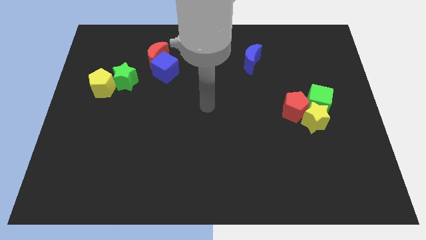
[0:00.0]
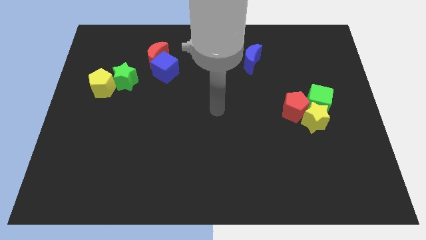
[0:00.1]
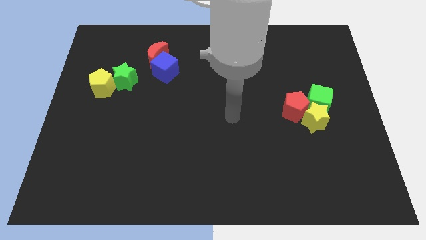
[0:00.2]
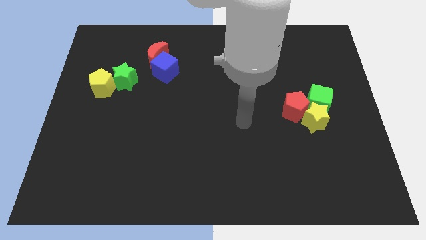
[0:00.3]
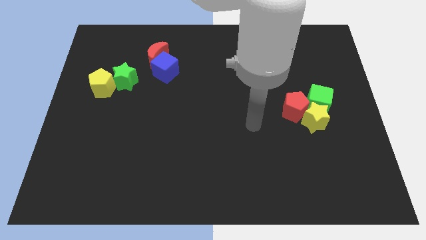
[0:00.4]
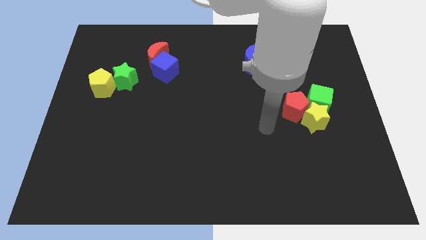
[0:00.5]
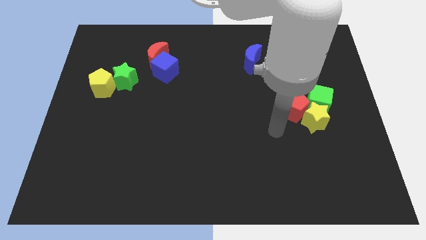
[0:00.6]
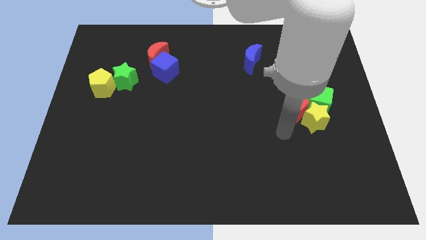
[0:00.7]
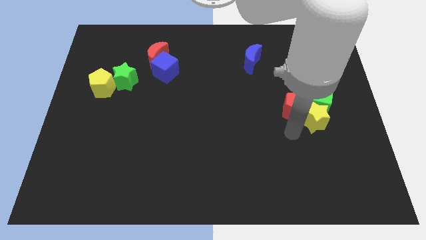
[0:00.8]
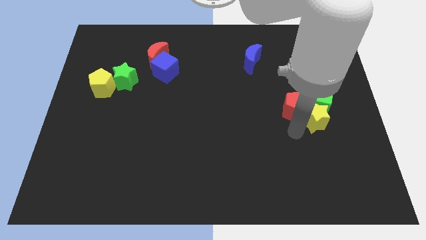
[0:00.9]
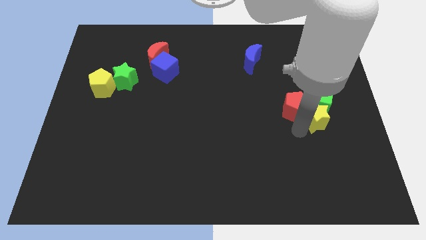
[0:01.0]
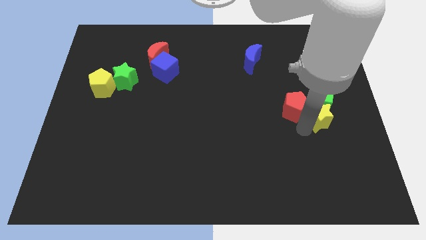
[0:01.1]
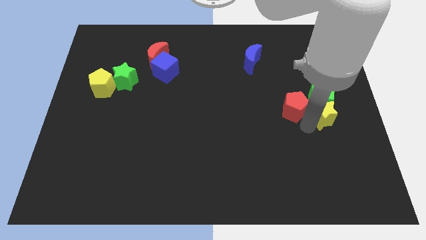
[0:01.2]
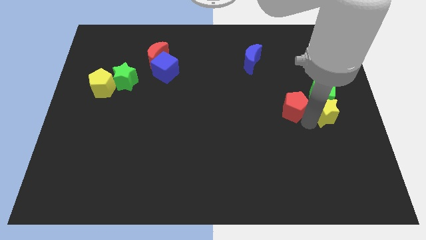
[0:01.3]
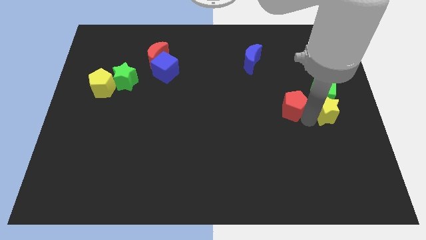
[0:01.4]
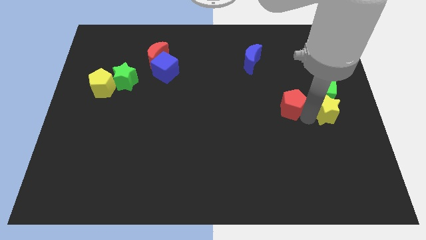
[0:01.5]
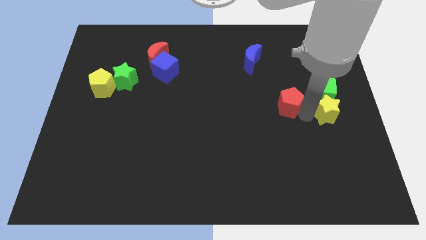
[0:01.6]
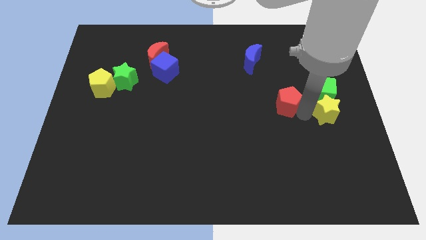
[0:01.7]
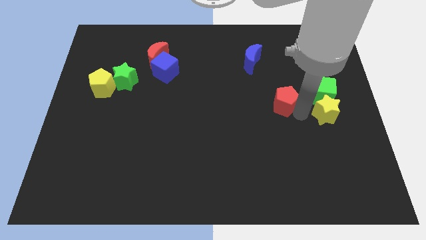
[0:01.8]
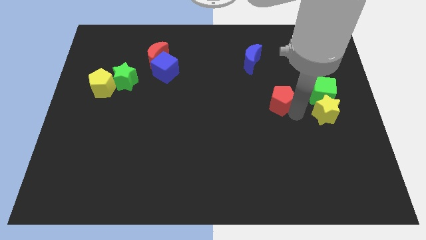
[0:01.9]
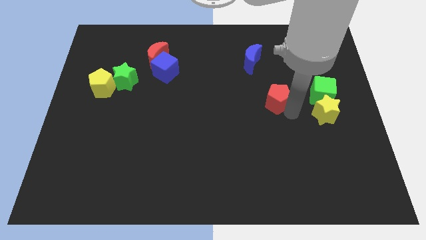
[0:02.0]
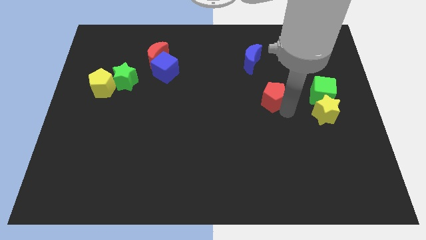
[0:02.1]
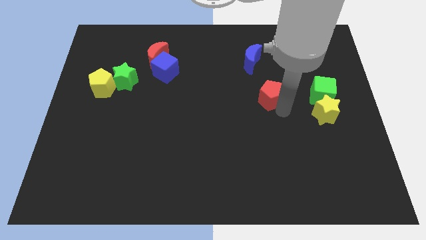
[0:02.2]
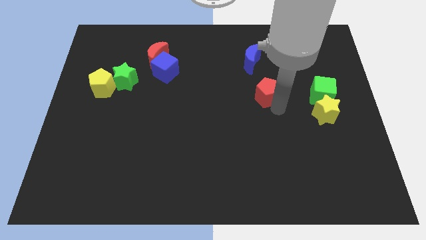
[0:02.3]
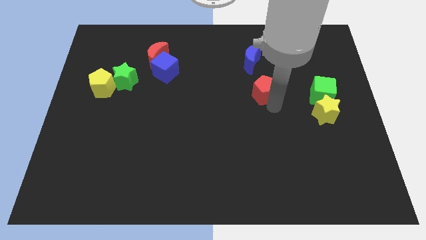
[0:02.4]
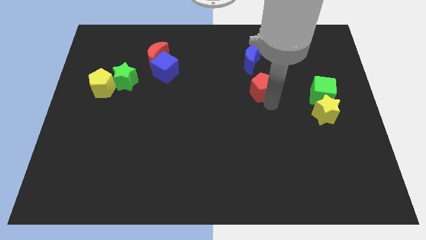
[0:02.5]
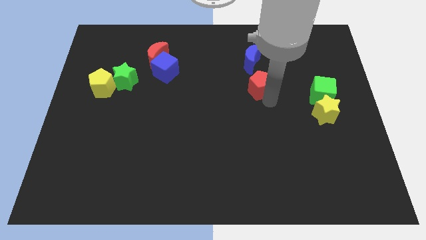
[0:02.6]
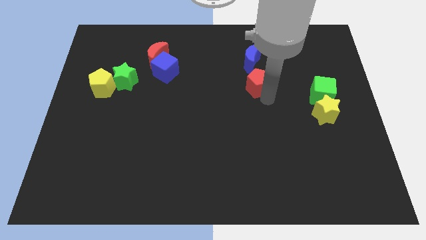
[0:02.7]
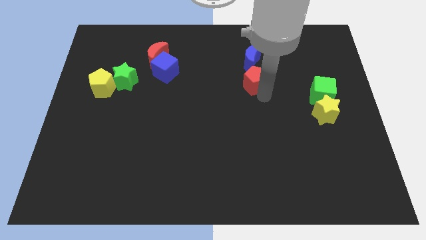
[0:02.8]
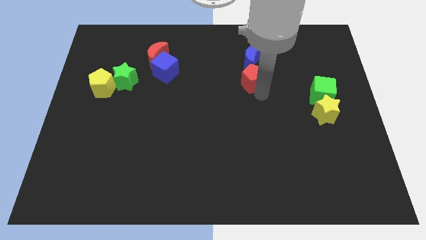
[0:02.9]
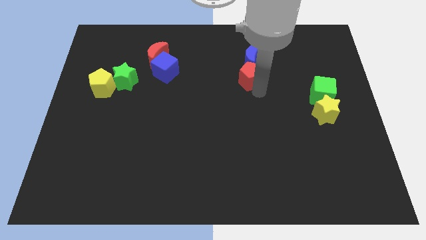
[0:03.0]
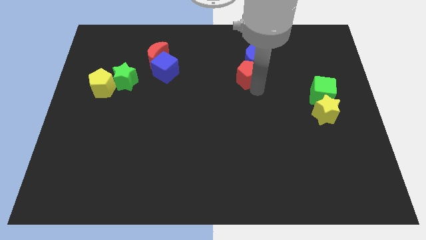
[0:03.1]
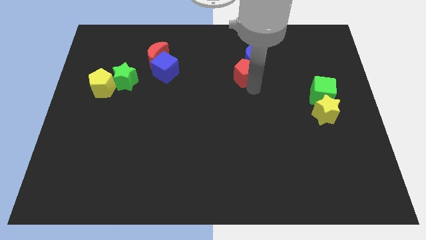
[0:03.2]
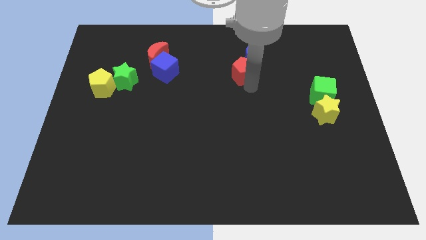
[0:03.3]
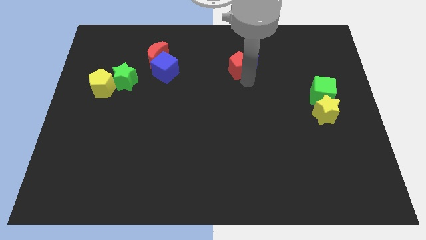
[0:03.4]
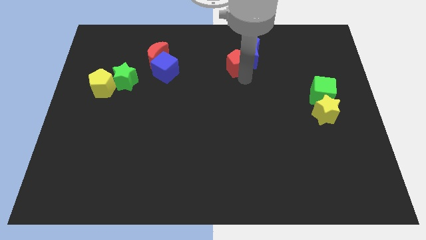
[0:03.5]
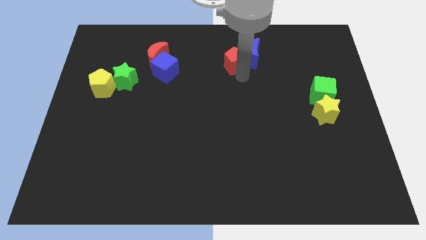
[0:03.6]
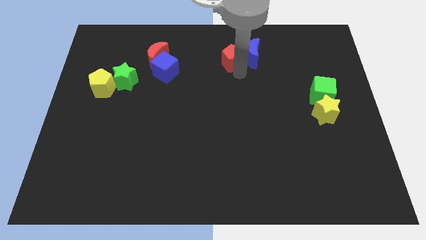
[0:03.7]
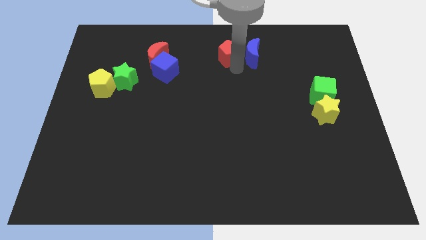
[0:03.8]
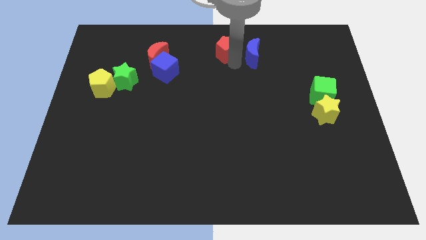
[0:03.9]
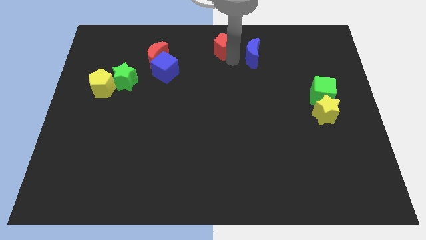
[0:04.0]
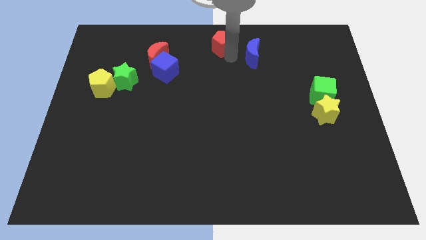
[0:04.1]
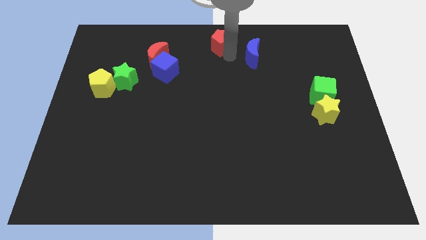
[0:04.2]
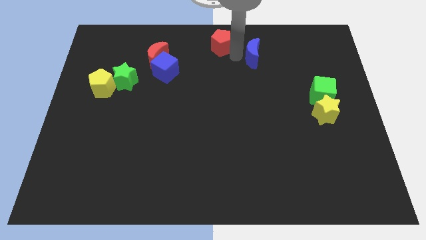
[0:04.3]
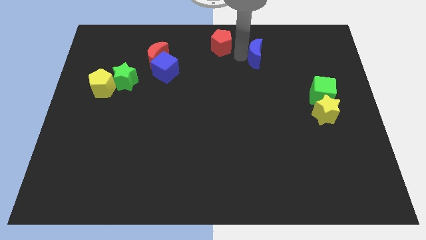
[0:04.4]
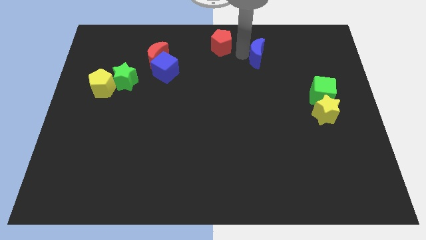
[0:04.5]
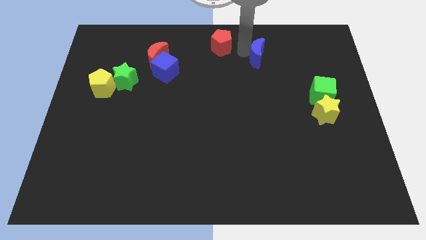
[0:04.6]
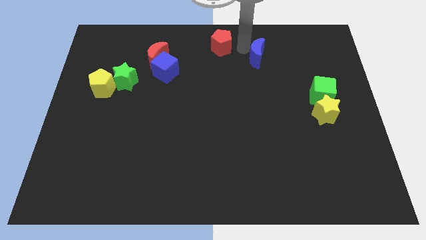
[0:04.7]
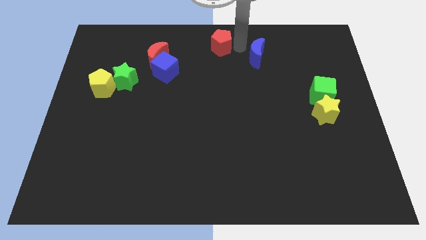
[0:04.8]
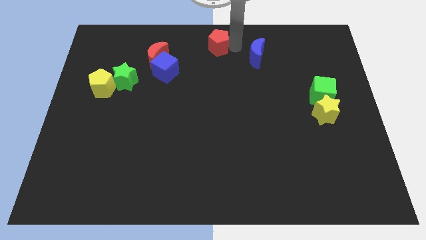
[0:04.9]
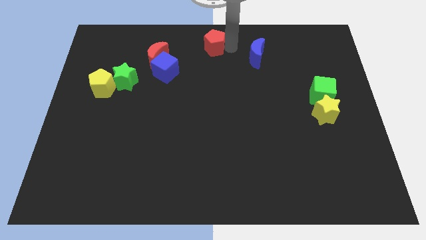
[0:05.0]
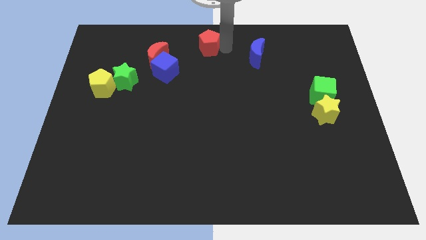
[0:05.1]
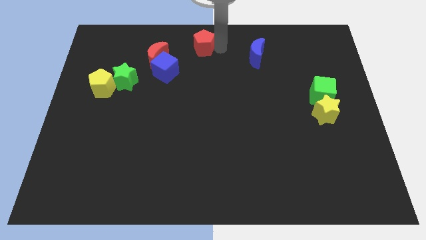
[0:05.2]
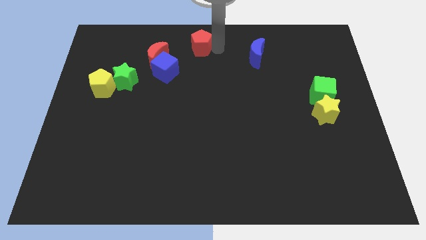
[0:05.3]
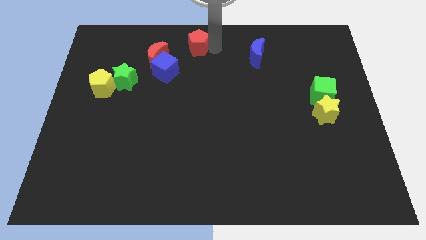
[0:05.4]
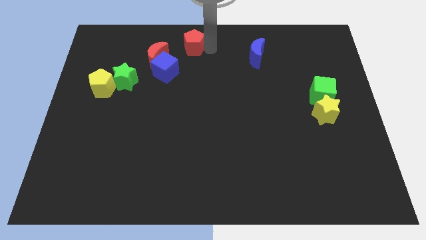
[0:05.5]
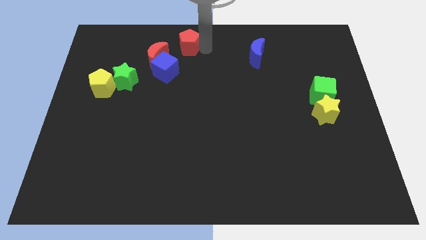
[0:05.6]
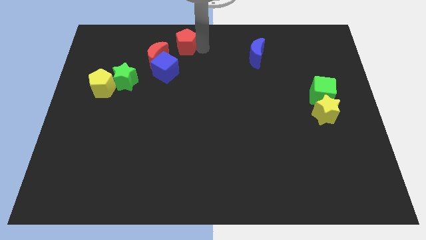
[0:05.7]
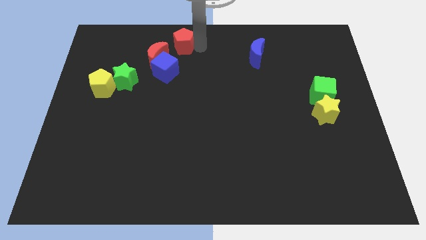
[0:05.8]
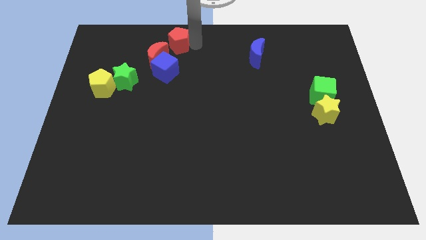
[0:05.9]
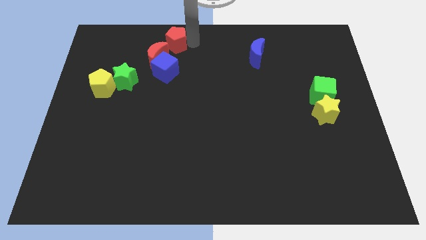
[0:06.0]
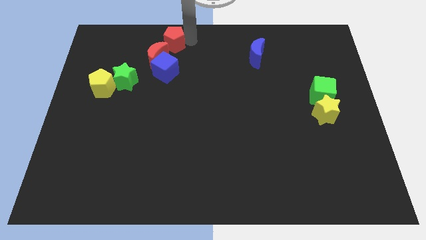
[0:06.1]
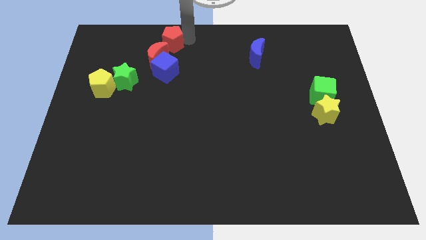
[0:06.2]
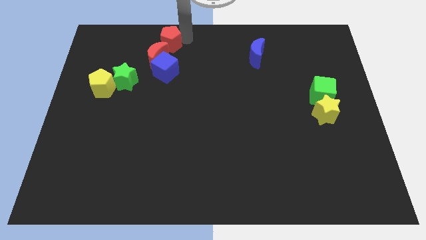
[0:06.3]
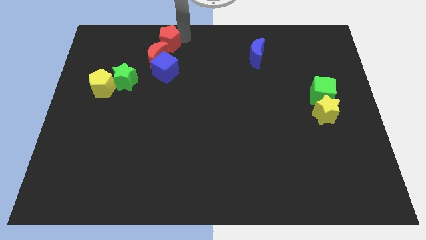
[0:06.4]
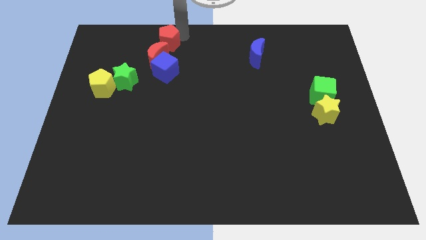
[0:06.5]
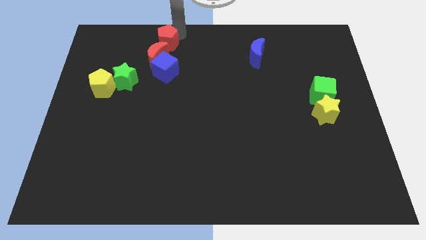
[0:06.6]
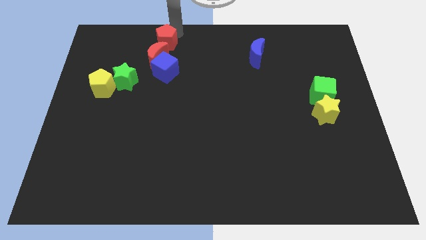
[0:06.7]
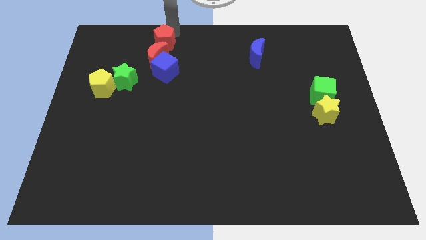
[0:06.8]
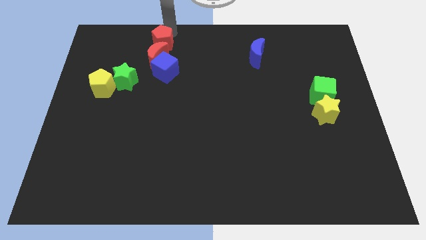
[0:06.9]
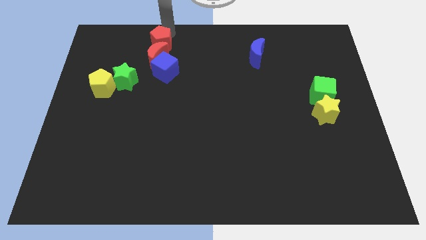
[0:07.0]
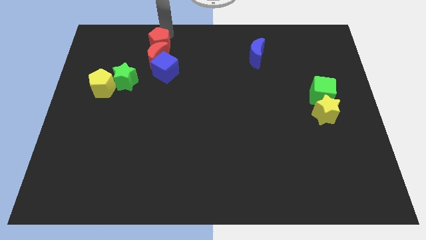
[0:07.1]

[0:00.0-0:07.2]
move the red pentagon next to the red moon

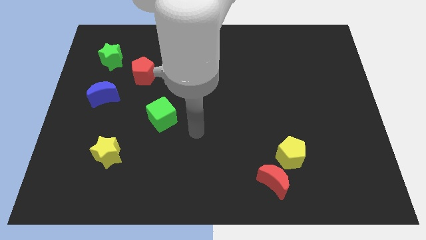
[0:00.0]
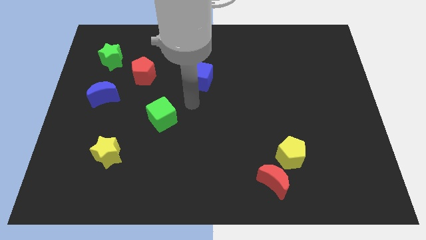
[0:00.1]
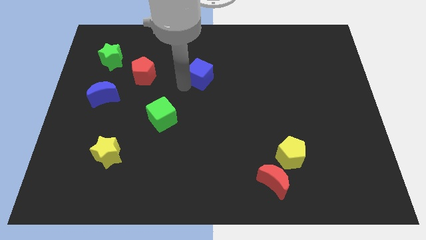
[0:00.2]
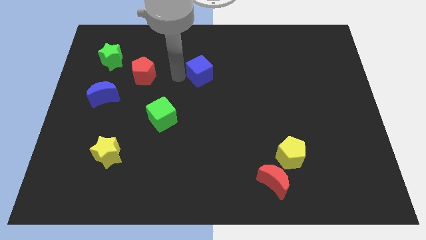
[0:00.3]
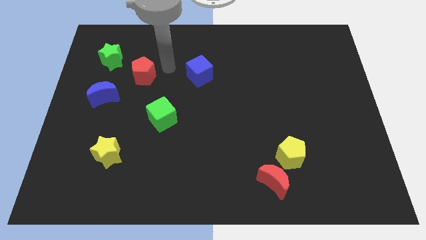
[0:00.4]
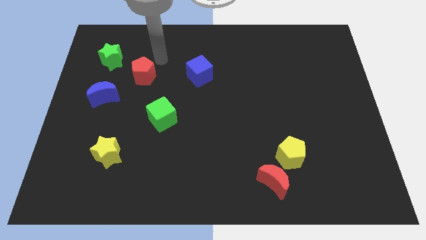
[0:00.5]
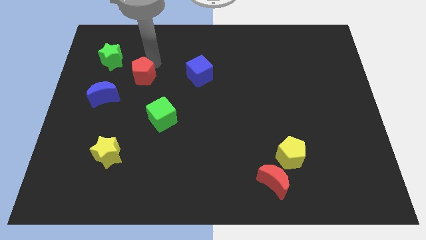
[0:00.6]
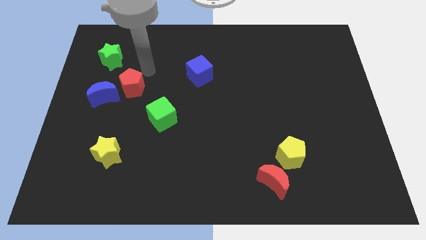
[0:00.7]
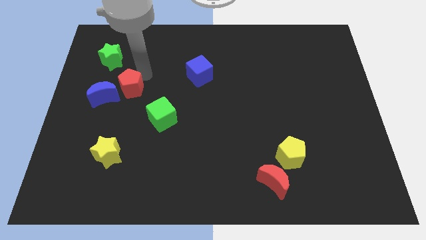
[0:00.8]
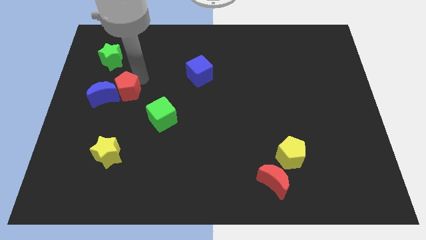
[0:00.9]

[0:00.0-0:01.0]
slide the red pentagon to the blue moon
